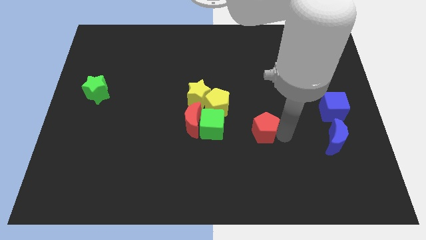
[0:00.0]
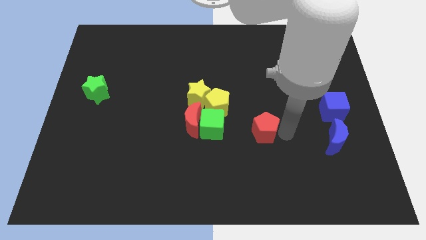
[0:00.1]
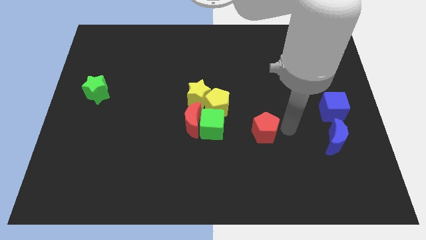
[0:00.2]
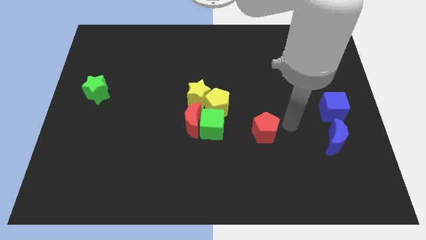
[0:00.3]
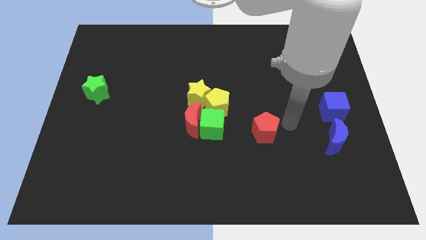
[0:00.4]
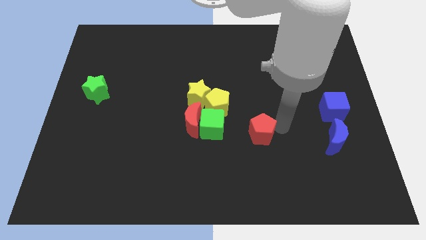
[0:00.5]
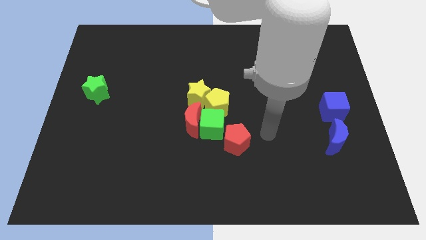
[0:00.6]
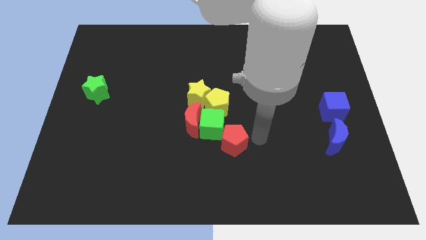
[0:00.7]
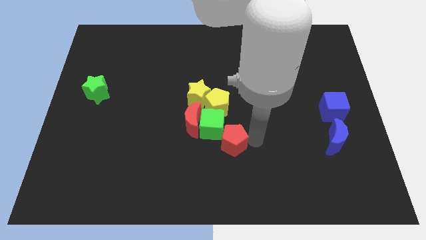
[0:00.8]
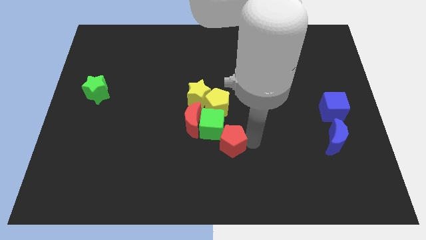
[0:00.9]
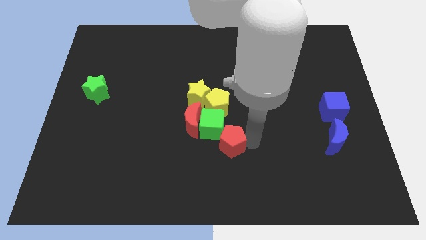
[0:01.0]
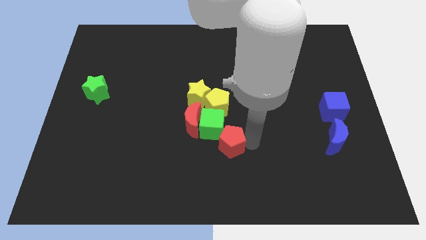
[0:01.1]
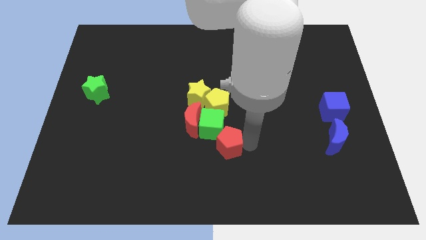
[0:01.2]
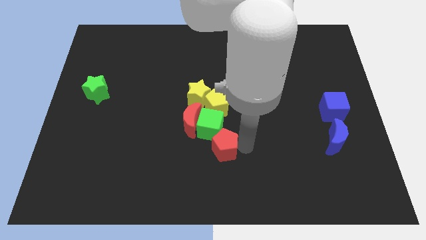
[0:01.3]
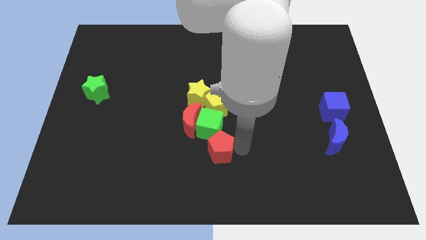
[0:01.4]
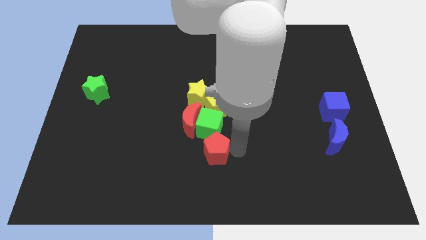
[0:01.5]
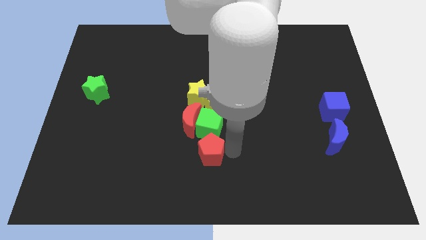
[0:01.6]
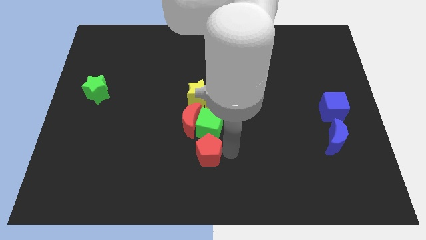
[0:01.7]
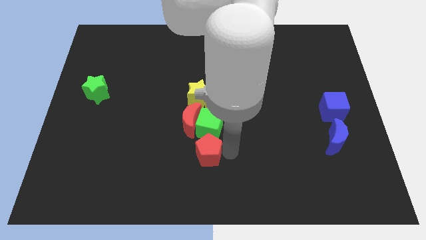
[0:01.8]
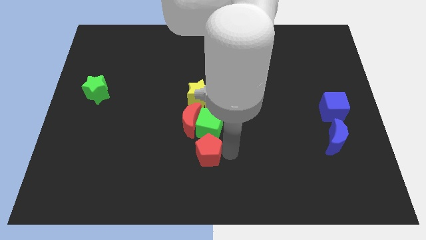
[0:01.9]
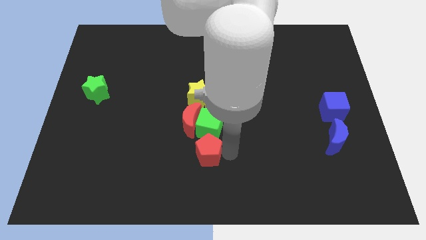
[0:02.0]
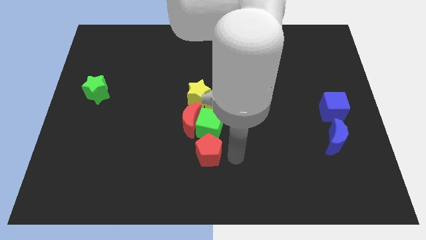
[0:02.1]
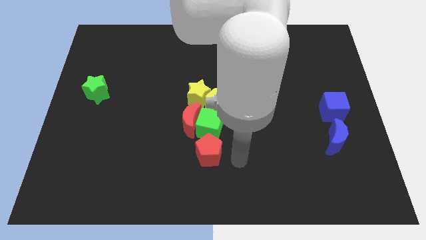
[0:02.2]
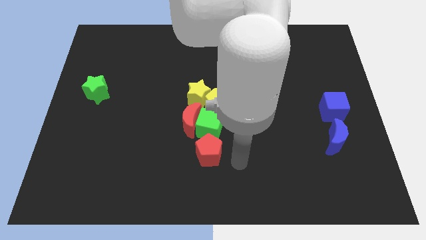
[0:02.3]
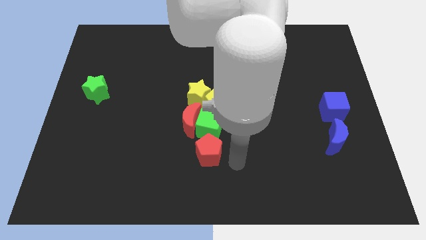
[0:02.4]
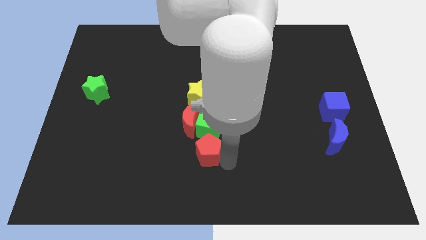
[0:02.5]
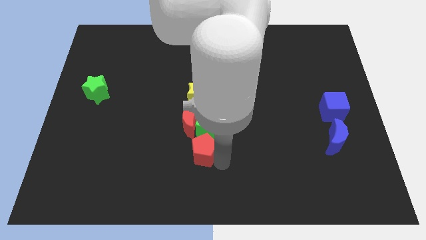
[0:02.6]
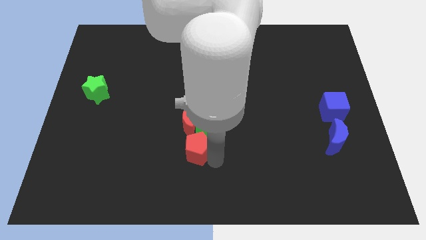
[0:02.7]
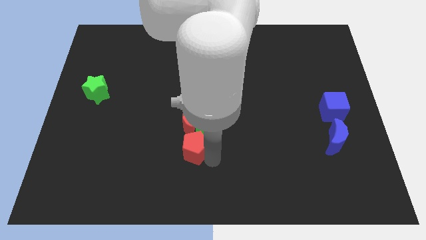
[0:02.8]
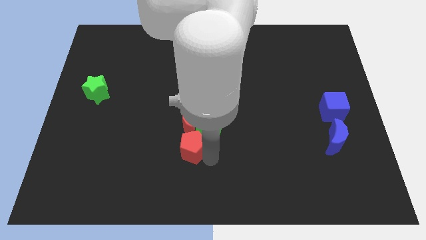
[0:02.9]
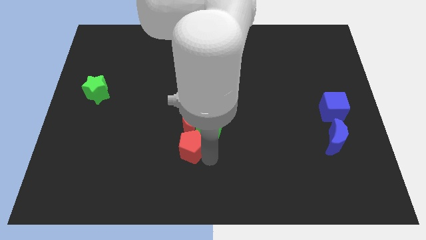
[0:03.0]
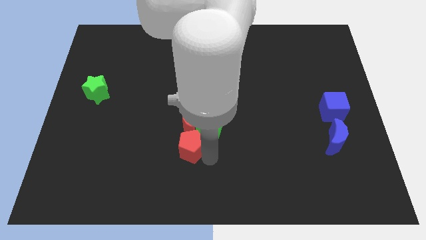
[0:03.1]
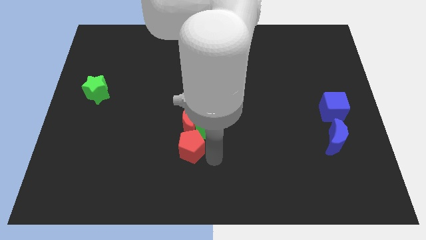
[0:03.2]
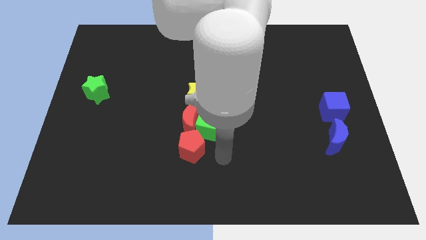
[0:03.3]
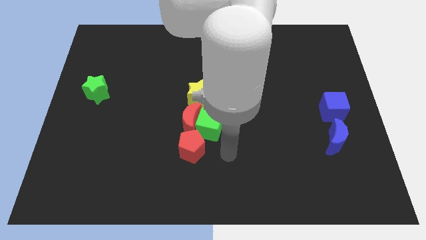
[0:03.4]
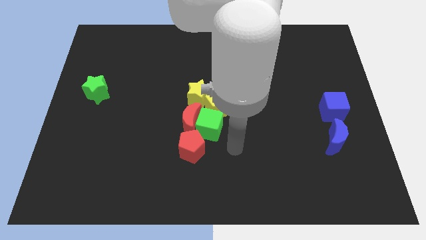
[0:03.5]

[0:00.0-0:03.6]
push the red pentagon to the bottom of green cube

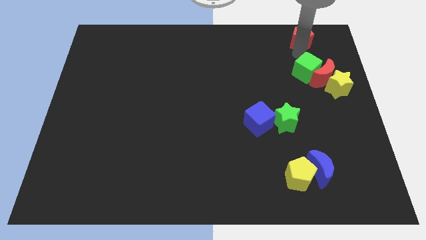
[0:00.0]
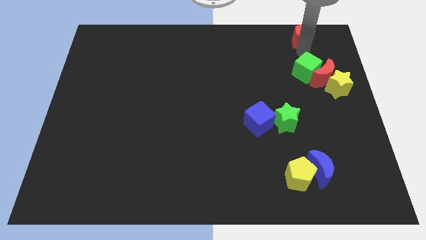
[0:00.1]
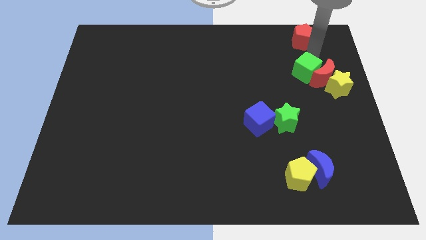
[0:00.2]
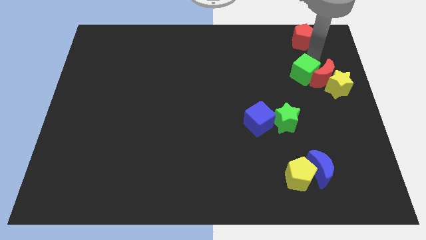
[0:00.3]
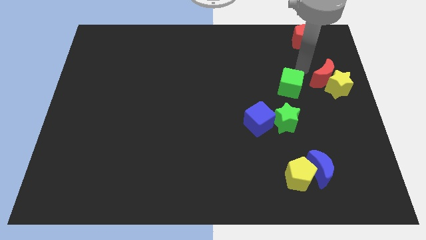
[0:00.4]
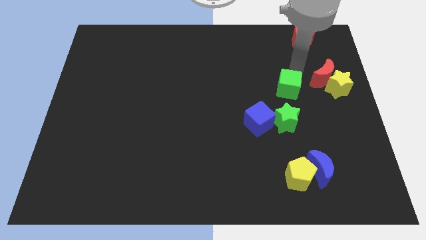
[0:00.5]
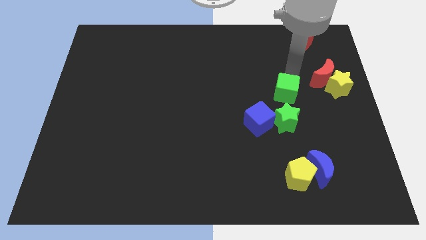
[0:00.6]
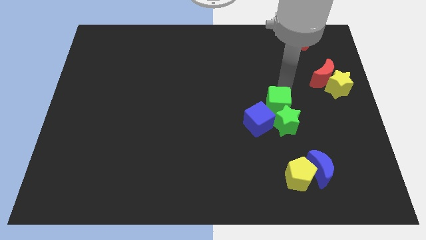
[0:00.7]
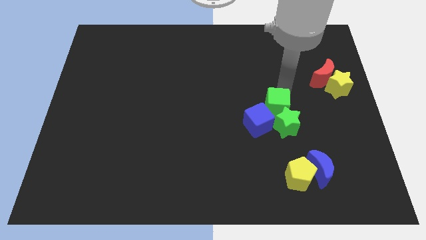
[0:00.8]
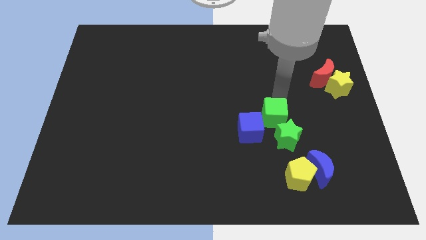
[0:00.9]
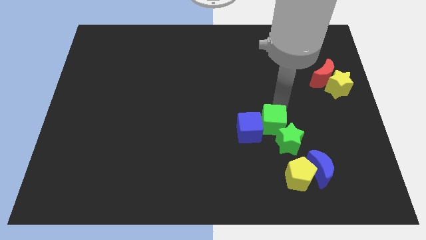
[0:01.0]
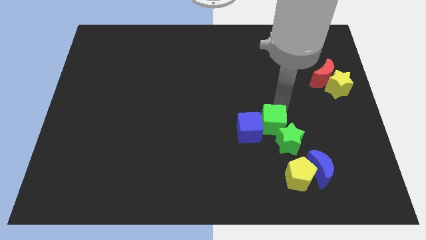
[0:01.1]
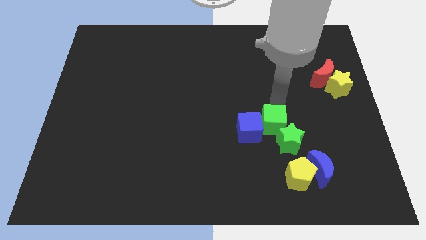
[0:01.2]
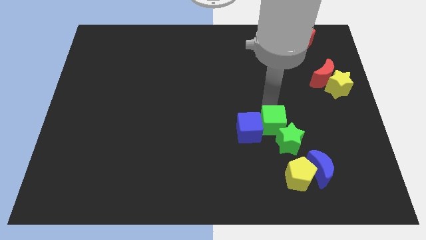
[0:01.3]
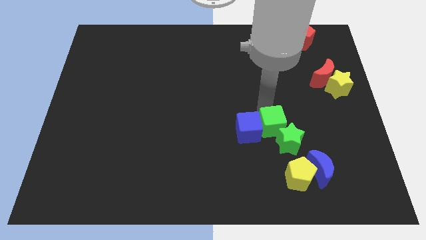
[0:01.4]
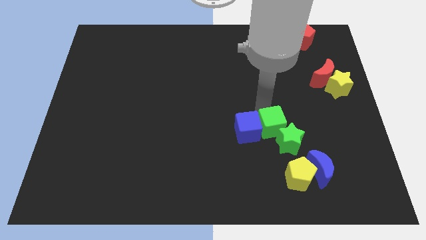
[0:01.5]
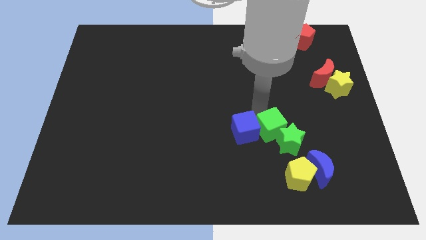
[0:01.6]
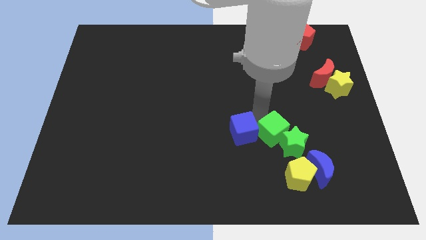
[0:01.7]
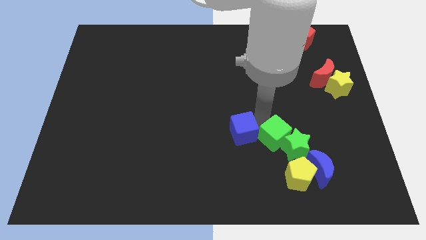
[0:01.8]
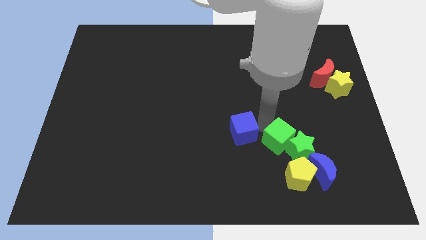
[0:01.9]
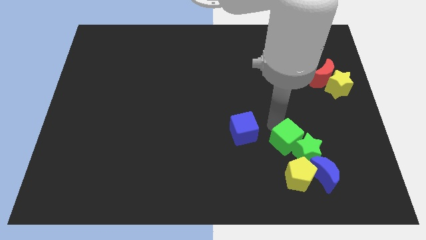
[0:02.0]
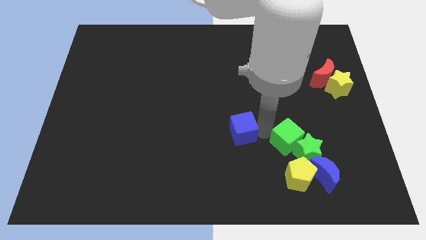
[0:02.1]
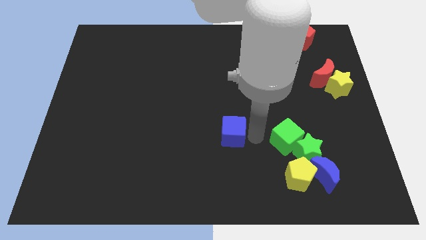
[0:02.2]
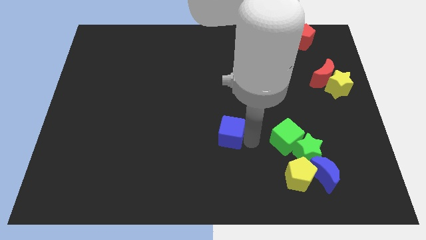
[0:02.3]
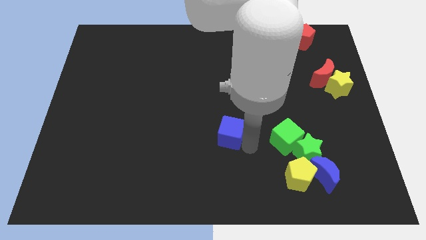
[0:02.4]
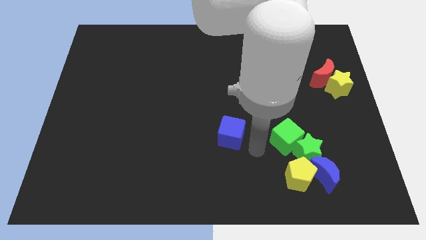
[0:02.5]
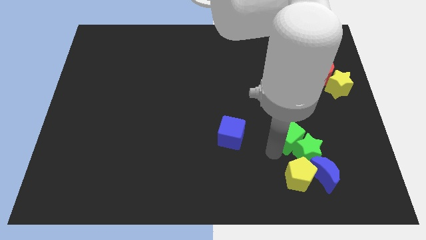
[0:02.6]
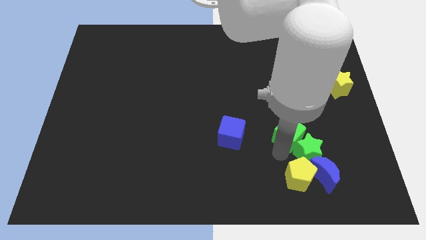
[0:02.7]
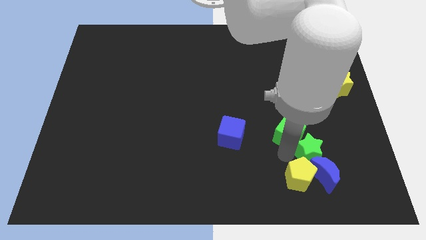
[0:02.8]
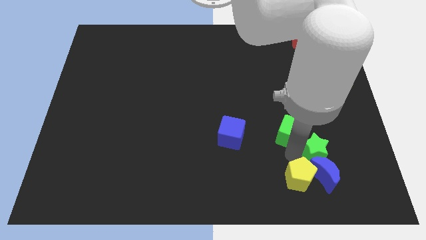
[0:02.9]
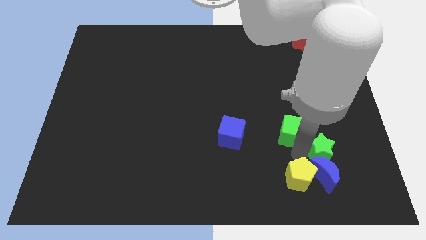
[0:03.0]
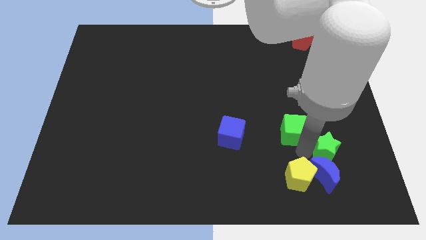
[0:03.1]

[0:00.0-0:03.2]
move green cube into green star

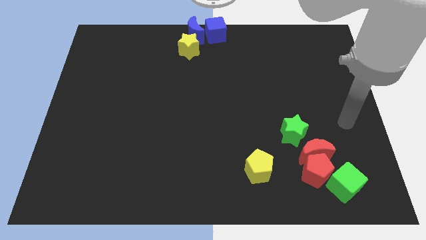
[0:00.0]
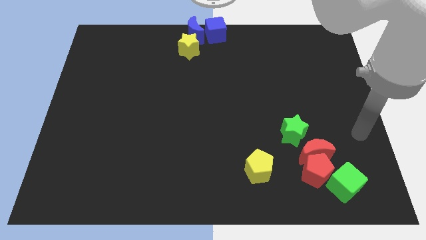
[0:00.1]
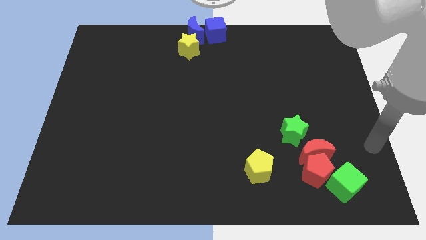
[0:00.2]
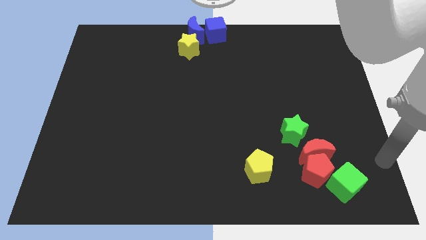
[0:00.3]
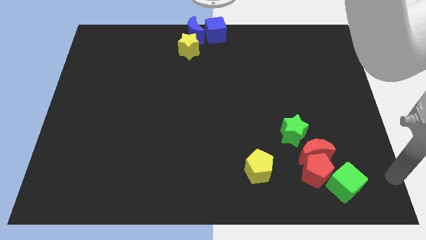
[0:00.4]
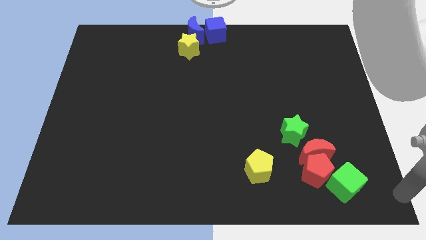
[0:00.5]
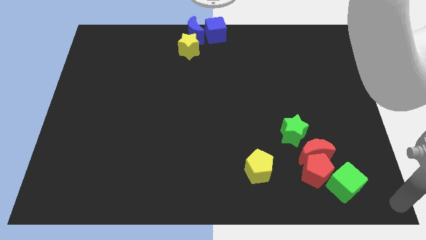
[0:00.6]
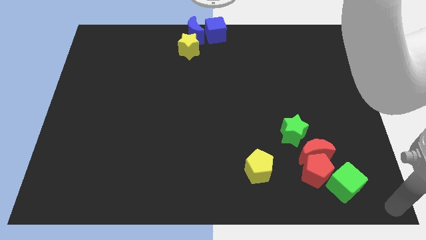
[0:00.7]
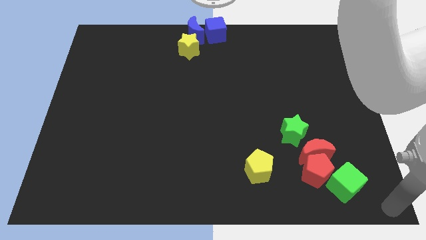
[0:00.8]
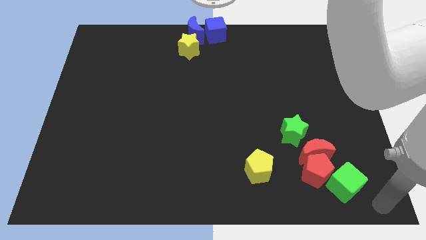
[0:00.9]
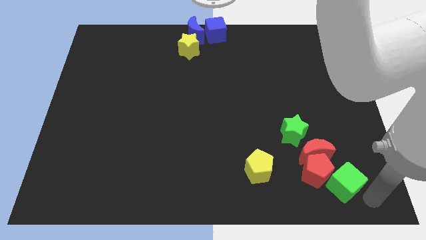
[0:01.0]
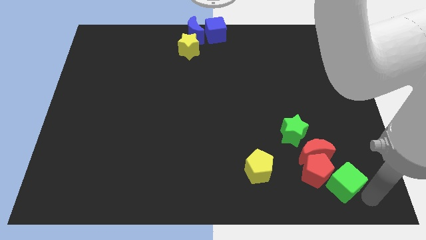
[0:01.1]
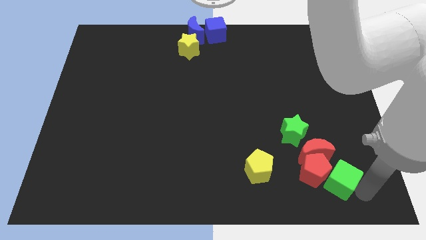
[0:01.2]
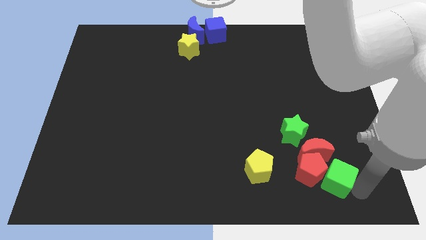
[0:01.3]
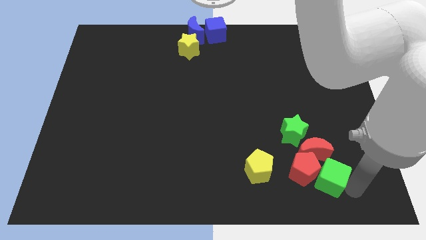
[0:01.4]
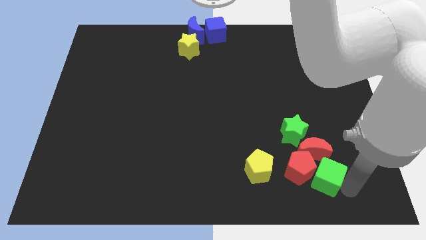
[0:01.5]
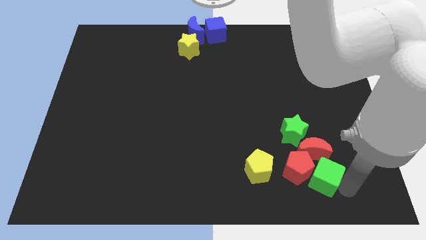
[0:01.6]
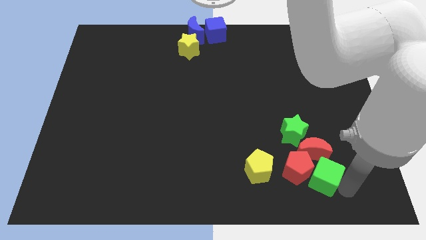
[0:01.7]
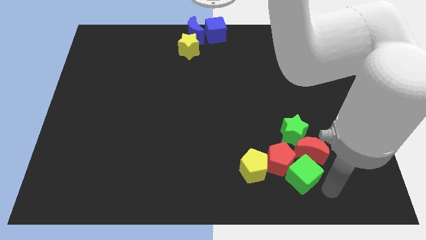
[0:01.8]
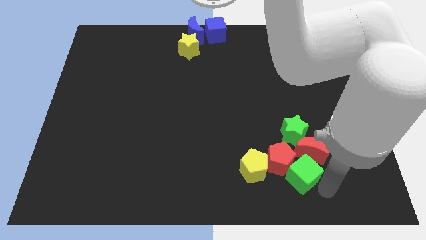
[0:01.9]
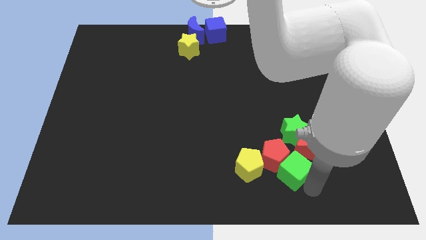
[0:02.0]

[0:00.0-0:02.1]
push the green cube into the red pentagon

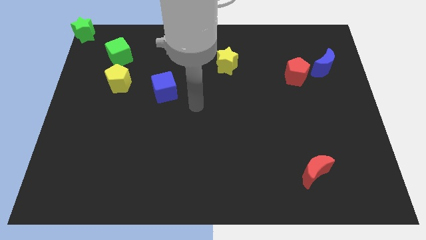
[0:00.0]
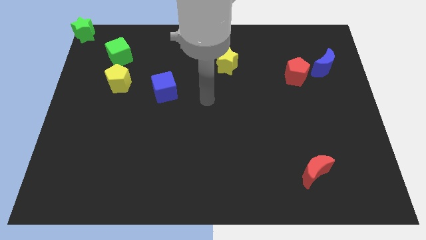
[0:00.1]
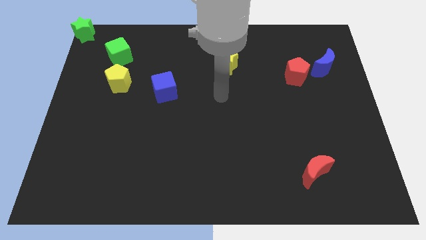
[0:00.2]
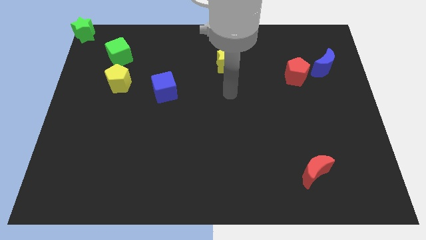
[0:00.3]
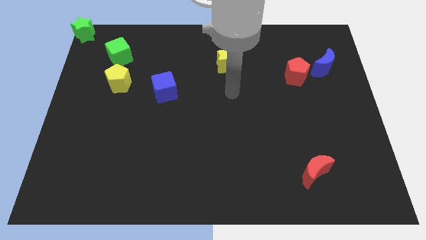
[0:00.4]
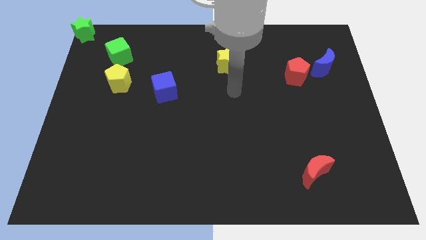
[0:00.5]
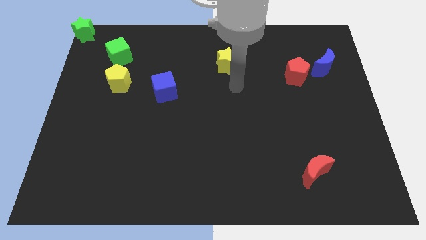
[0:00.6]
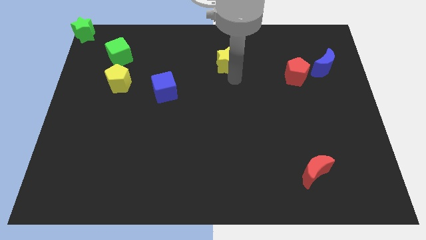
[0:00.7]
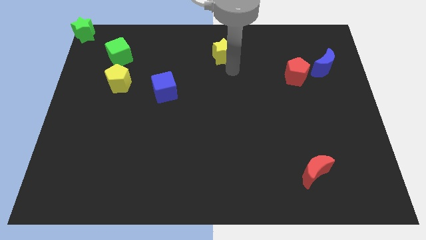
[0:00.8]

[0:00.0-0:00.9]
slightly push the yellow star
